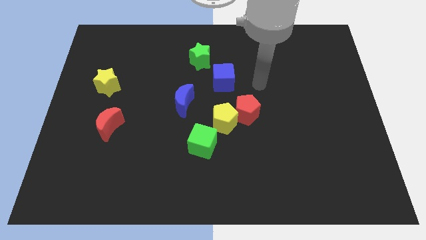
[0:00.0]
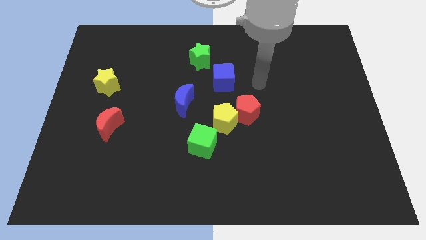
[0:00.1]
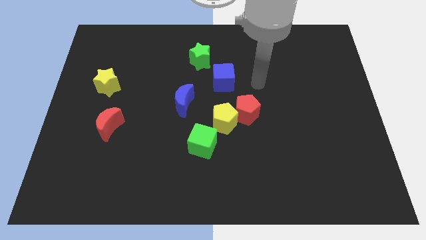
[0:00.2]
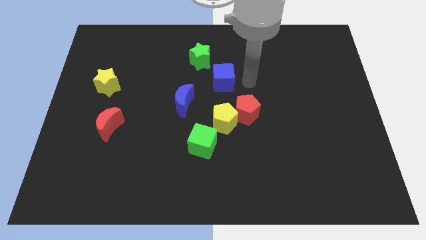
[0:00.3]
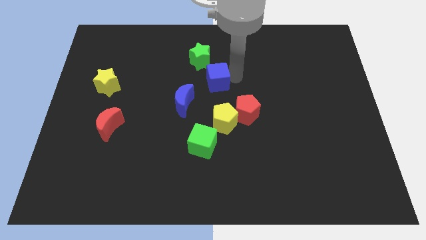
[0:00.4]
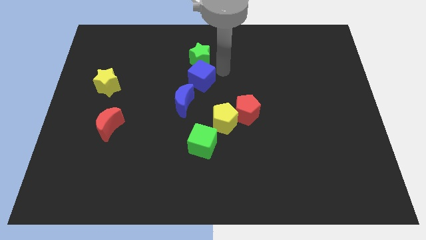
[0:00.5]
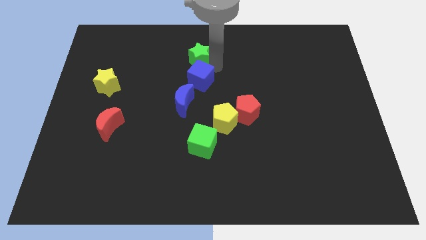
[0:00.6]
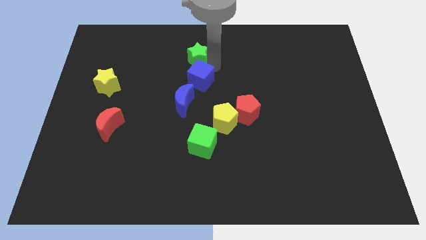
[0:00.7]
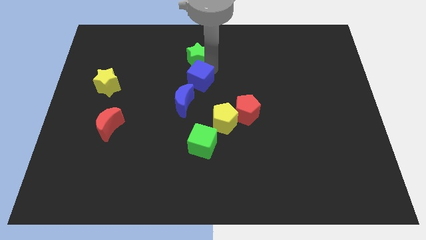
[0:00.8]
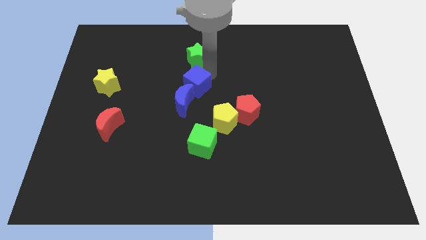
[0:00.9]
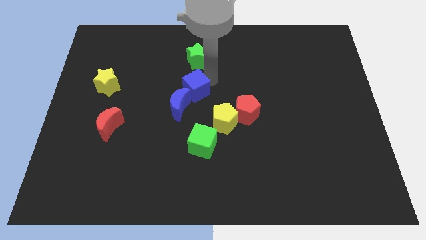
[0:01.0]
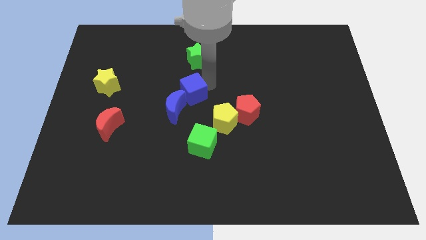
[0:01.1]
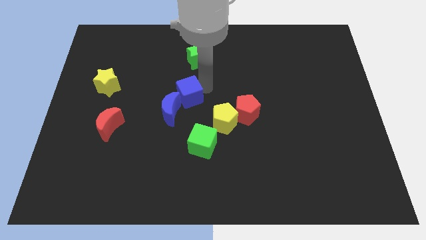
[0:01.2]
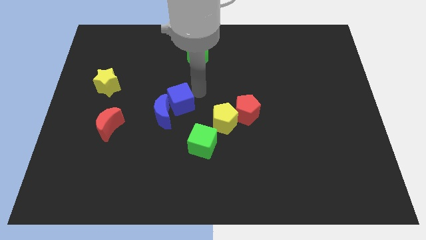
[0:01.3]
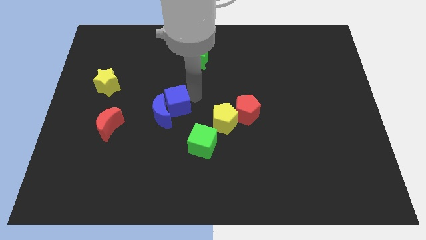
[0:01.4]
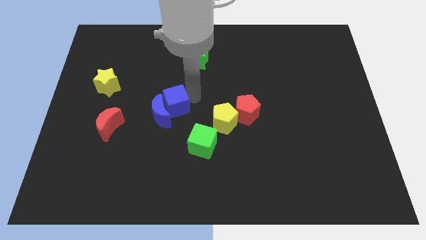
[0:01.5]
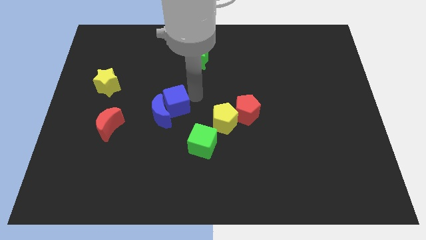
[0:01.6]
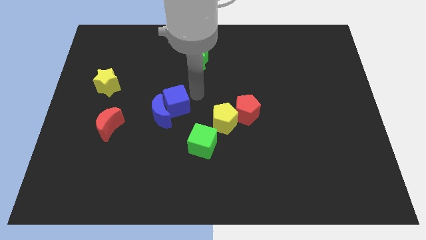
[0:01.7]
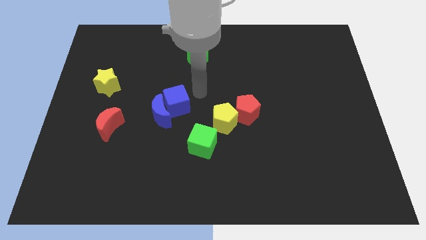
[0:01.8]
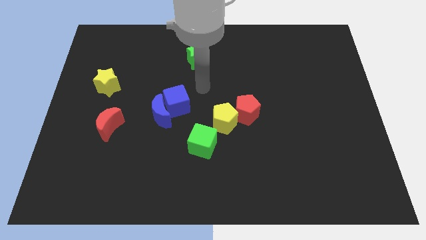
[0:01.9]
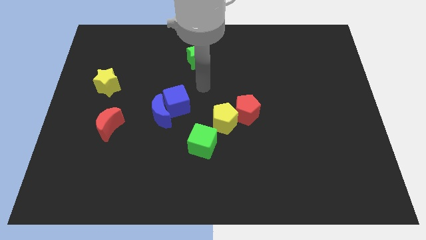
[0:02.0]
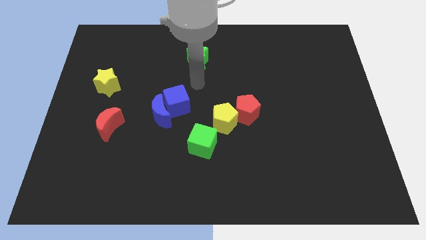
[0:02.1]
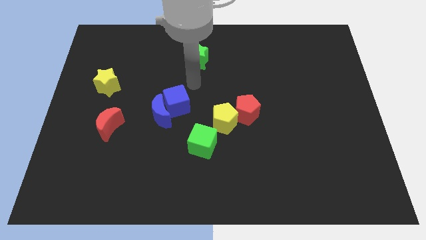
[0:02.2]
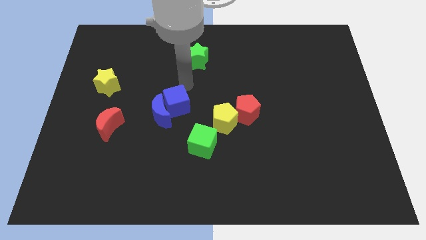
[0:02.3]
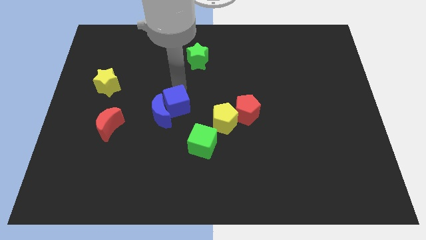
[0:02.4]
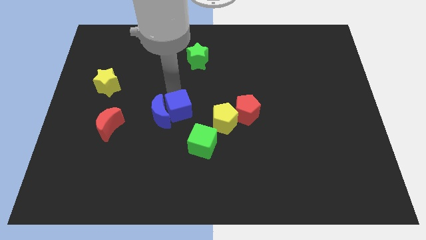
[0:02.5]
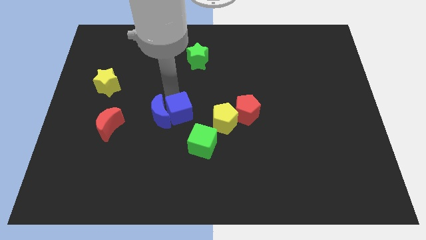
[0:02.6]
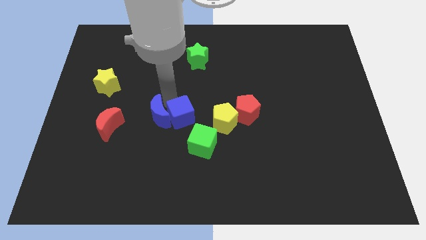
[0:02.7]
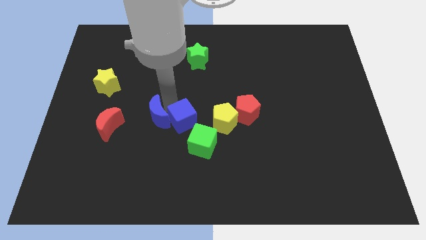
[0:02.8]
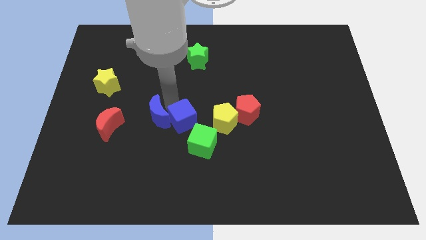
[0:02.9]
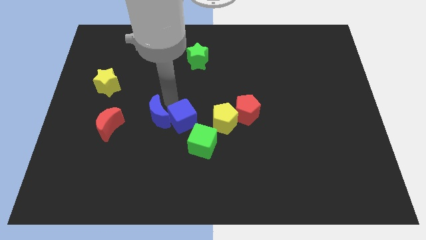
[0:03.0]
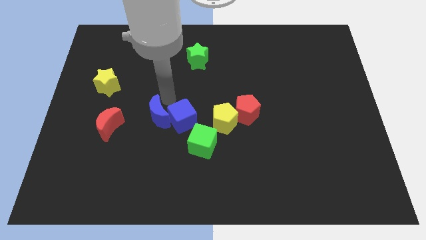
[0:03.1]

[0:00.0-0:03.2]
push the blue blocks in opposite direction to green star

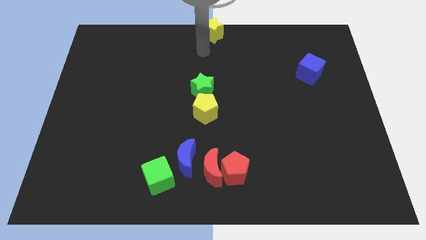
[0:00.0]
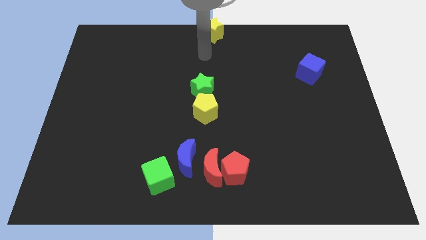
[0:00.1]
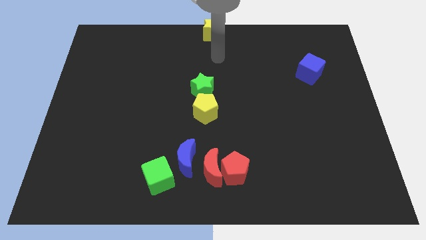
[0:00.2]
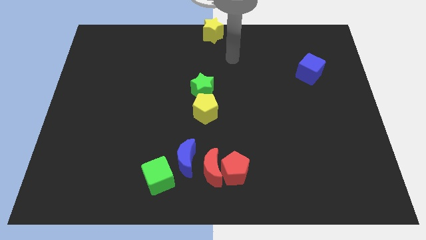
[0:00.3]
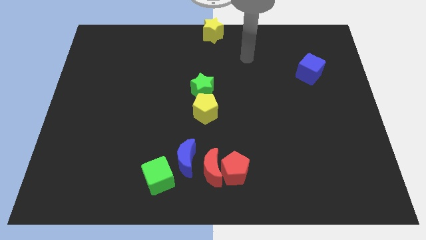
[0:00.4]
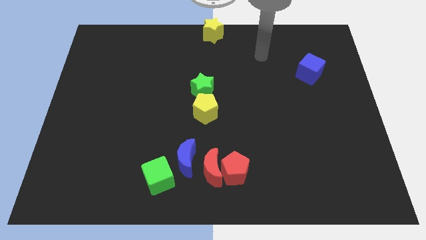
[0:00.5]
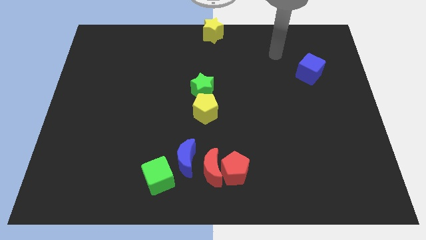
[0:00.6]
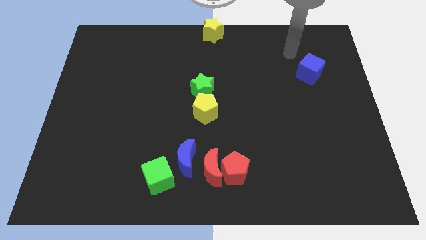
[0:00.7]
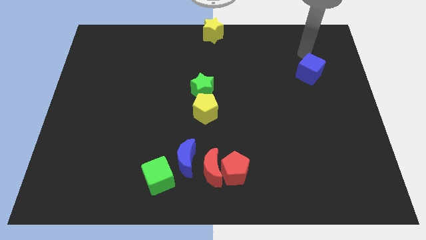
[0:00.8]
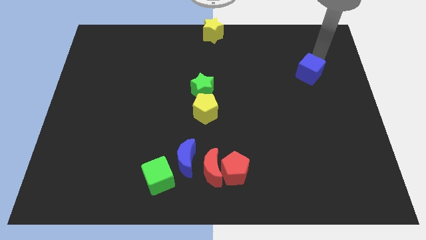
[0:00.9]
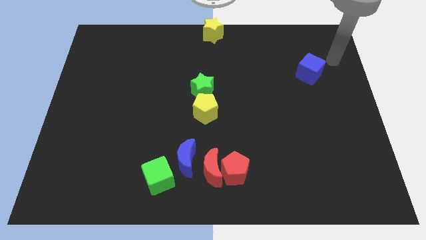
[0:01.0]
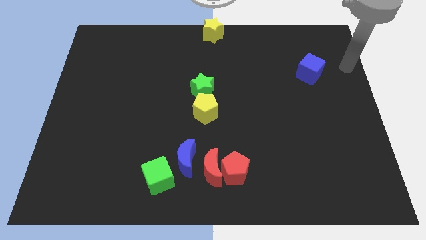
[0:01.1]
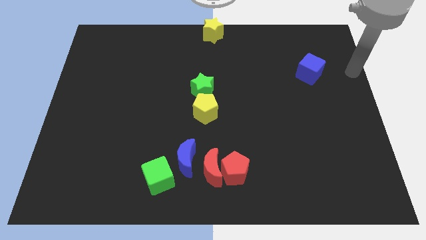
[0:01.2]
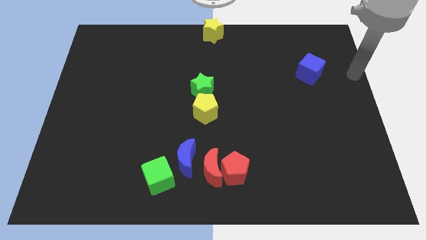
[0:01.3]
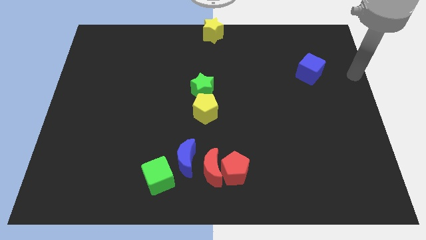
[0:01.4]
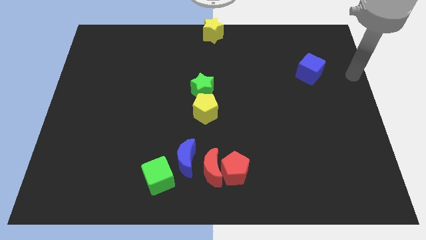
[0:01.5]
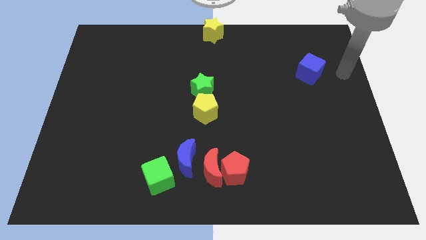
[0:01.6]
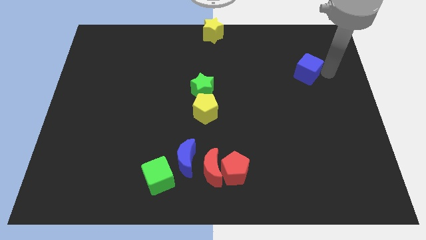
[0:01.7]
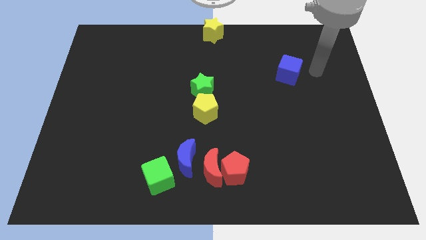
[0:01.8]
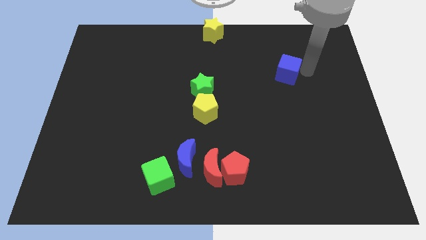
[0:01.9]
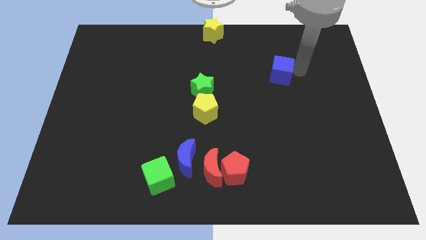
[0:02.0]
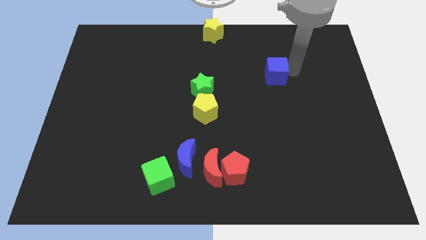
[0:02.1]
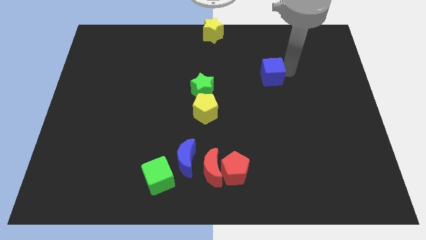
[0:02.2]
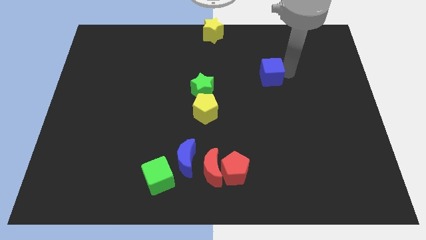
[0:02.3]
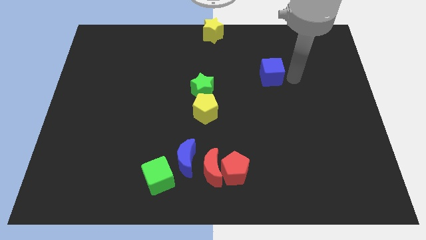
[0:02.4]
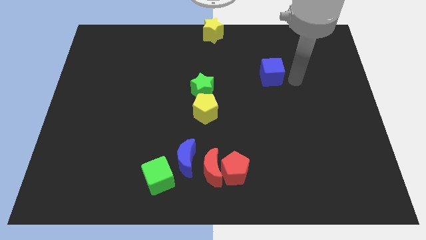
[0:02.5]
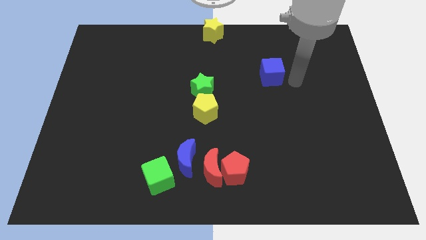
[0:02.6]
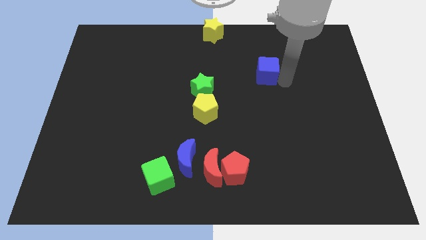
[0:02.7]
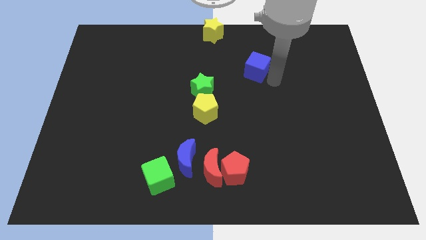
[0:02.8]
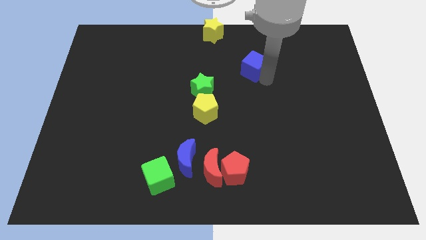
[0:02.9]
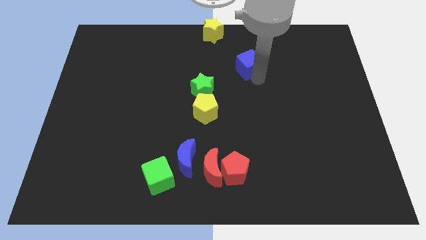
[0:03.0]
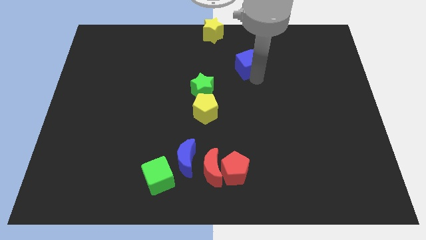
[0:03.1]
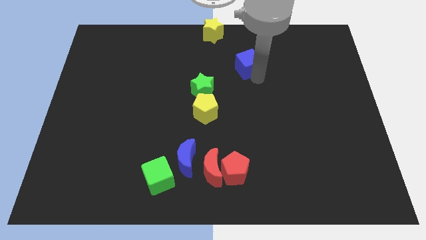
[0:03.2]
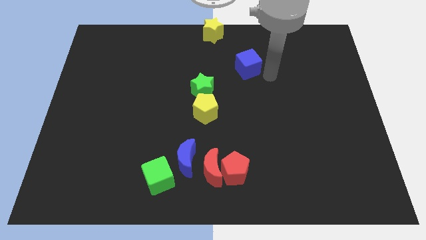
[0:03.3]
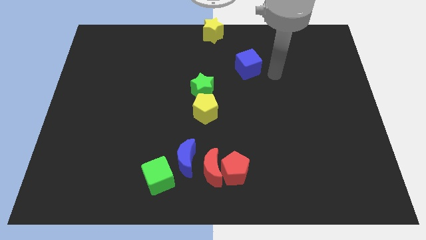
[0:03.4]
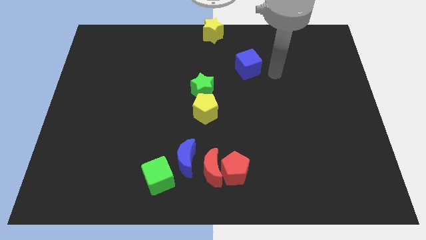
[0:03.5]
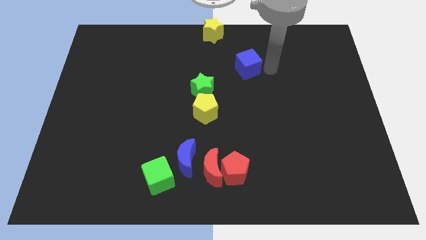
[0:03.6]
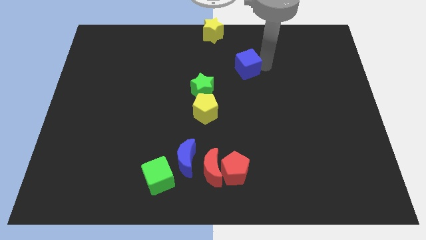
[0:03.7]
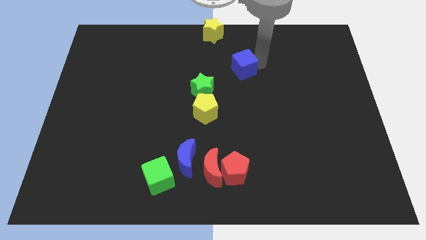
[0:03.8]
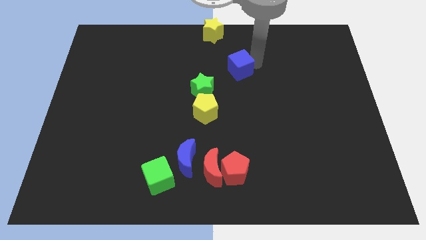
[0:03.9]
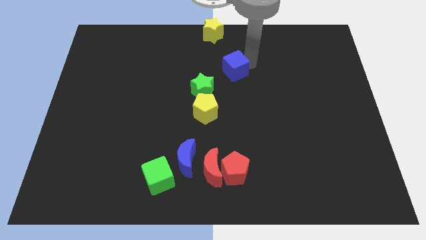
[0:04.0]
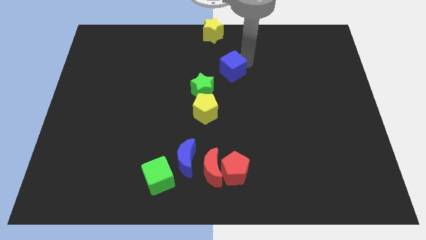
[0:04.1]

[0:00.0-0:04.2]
slide the blue cube close to the green star

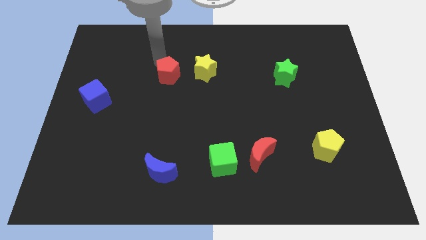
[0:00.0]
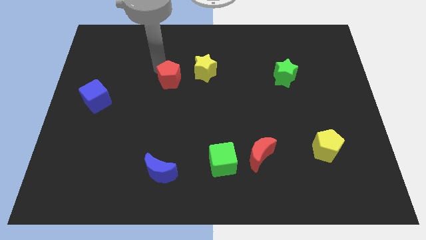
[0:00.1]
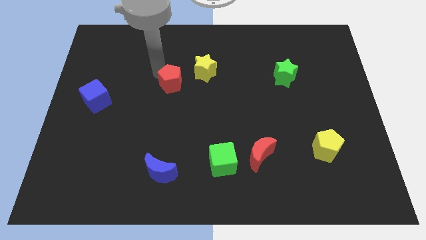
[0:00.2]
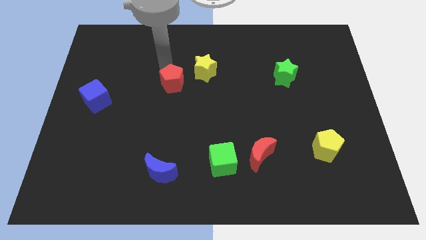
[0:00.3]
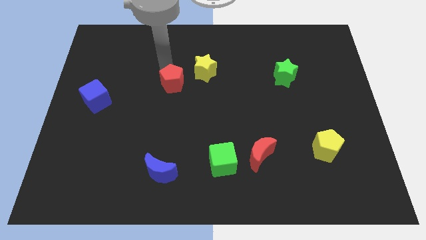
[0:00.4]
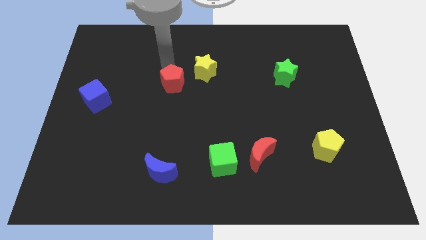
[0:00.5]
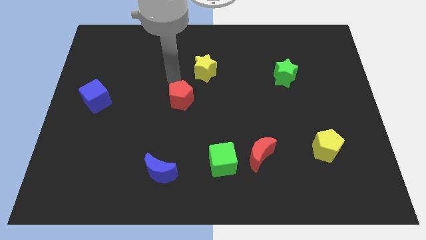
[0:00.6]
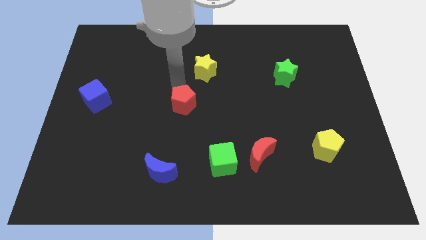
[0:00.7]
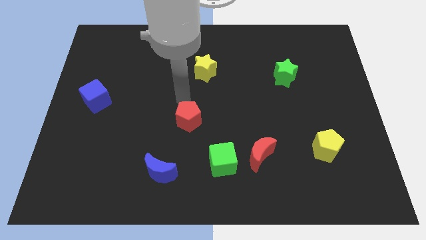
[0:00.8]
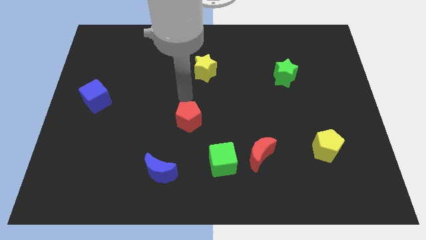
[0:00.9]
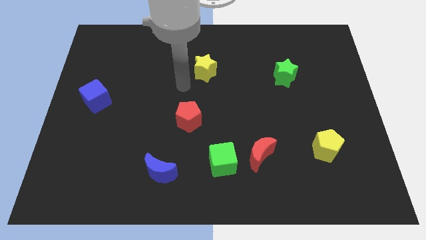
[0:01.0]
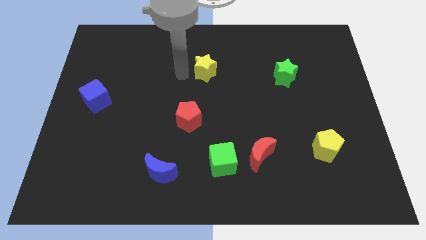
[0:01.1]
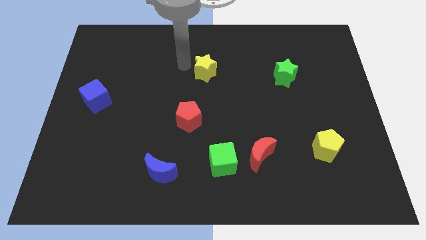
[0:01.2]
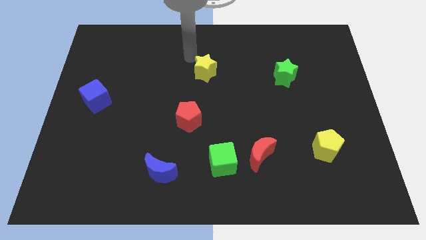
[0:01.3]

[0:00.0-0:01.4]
push the red pentagon towards green cube

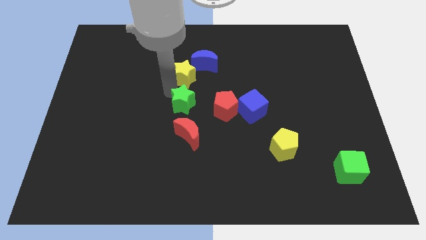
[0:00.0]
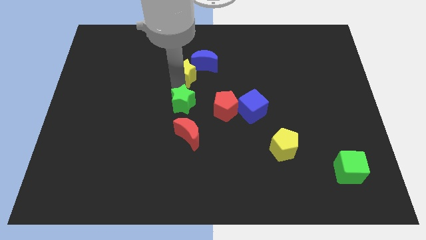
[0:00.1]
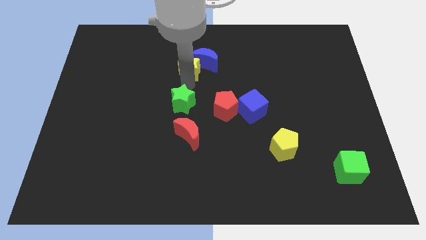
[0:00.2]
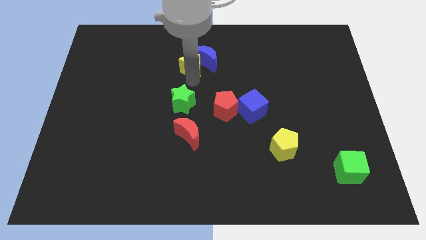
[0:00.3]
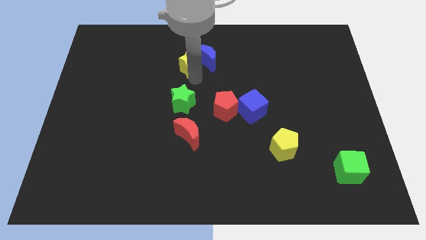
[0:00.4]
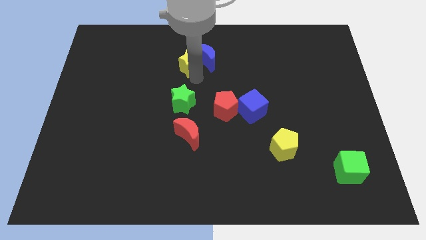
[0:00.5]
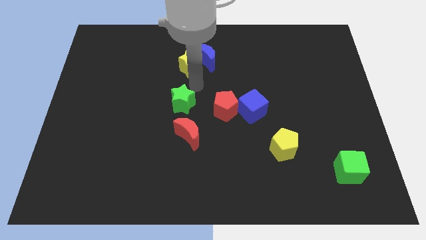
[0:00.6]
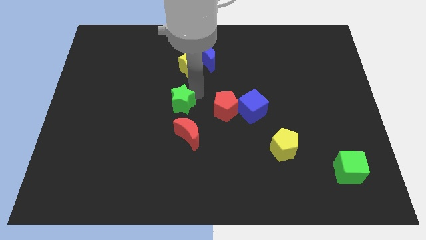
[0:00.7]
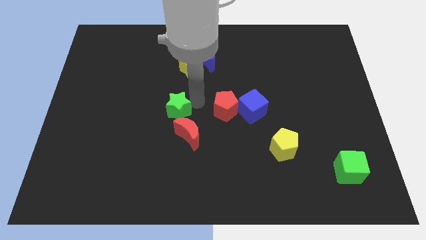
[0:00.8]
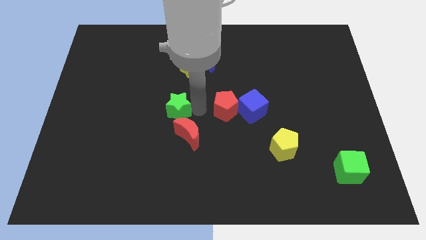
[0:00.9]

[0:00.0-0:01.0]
separate the green star and yellow star
